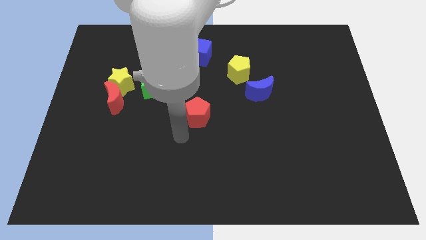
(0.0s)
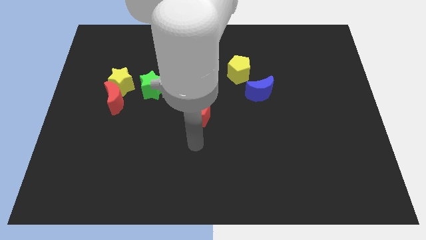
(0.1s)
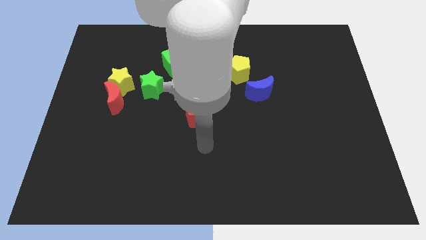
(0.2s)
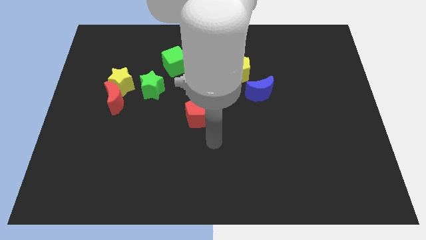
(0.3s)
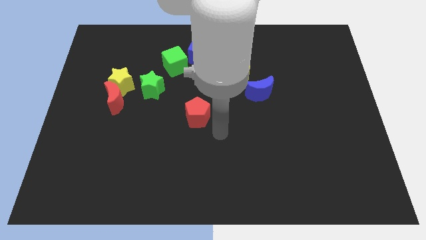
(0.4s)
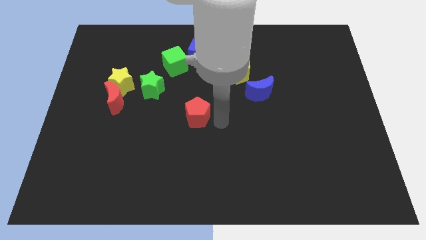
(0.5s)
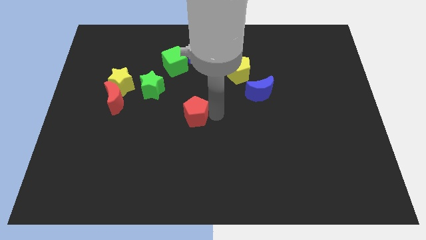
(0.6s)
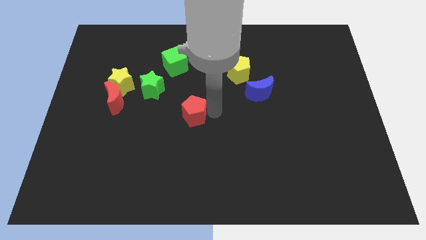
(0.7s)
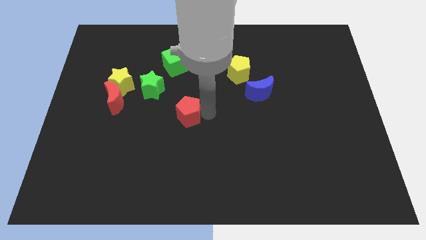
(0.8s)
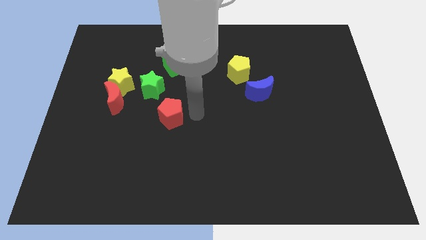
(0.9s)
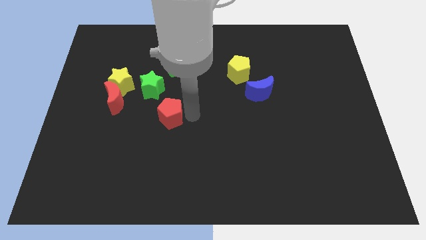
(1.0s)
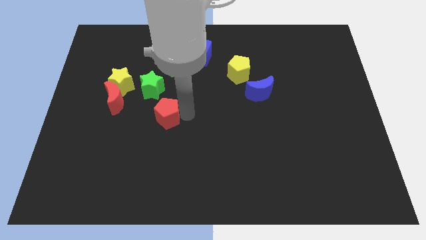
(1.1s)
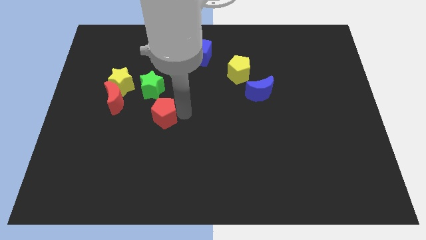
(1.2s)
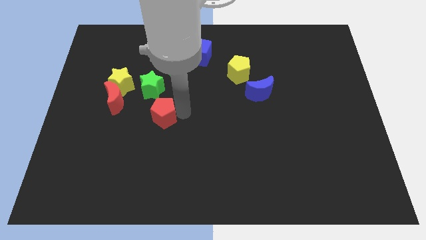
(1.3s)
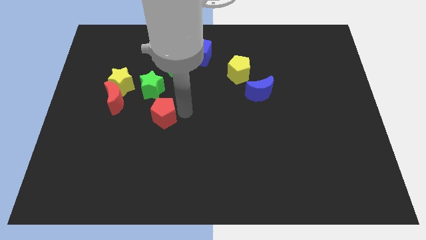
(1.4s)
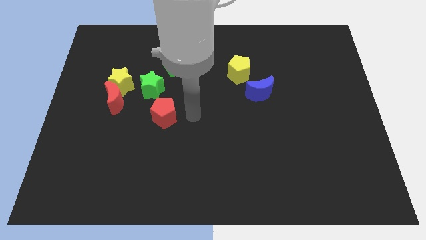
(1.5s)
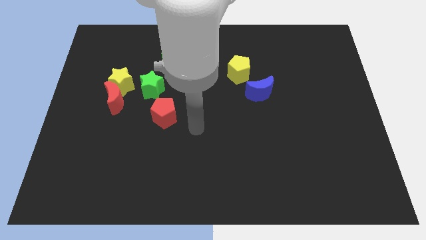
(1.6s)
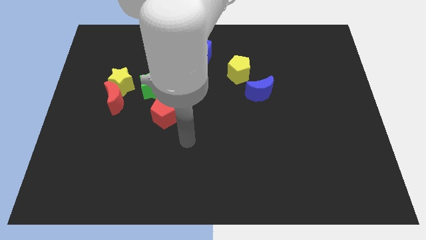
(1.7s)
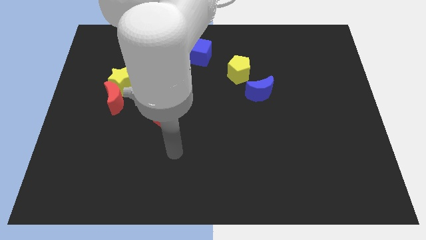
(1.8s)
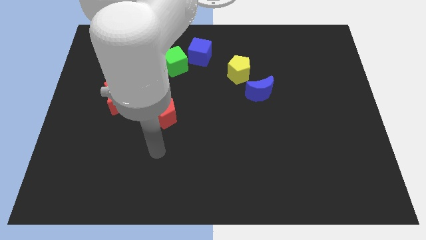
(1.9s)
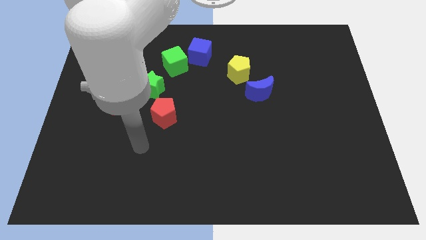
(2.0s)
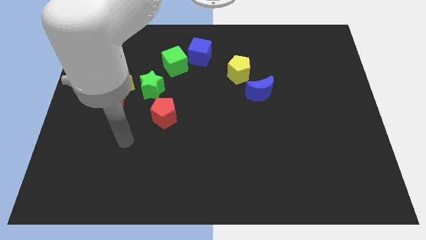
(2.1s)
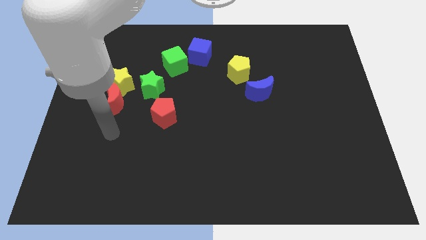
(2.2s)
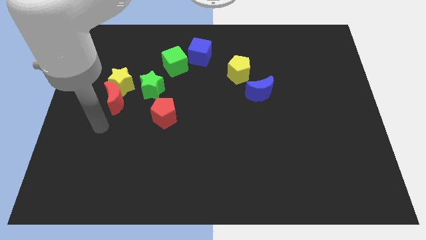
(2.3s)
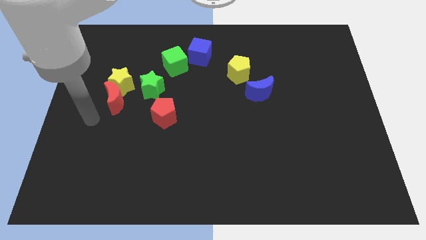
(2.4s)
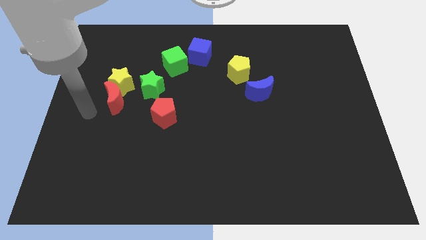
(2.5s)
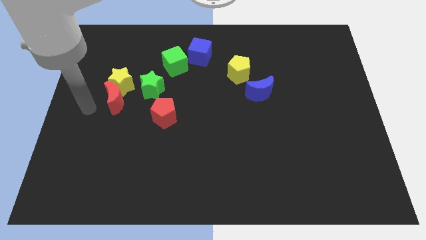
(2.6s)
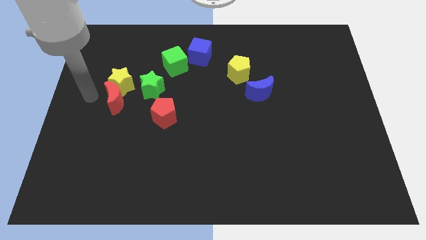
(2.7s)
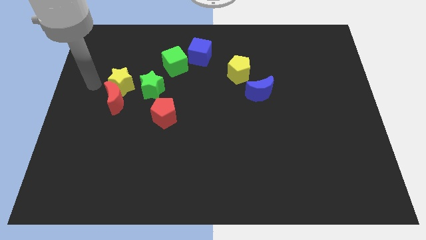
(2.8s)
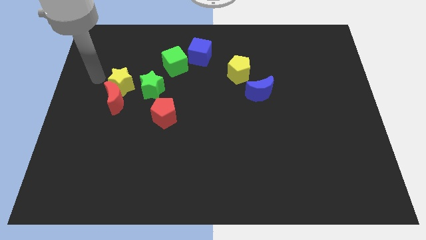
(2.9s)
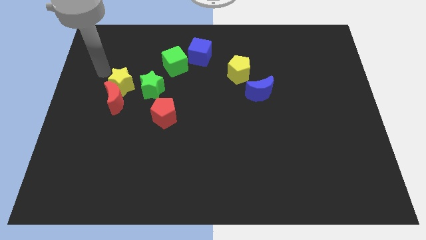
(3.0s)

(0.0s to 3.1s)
push the red pentagon slightly on the left side

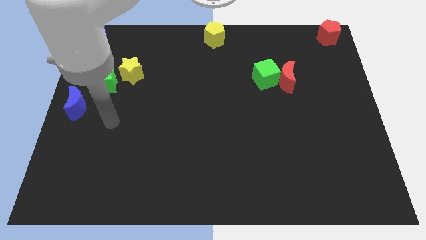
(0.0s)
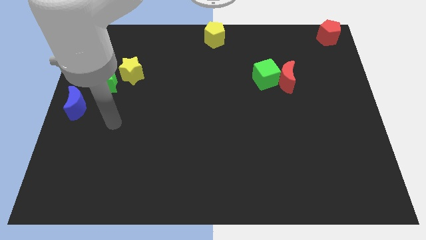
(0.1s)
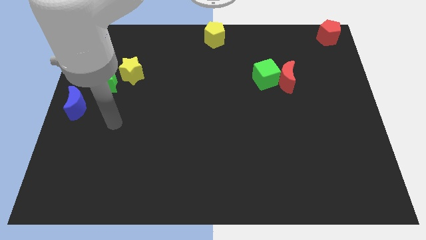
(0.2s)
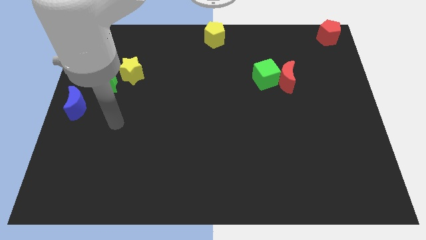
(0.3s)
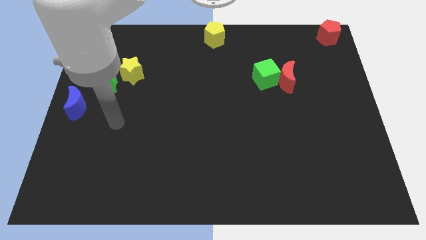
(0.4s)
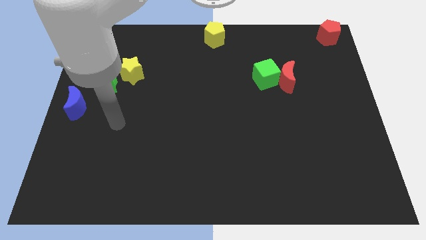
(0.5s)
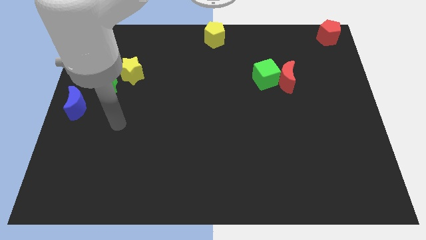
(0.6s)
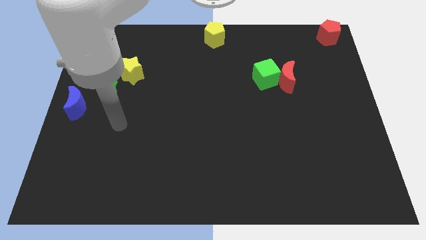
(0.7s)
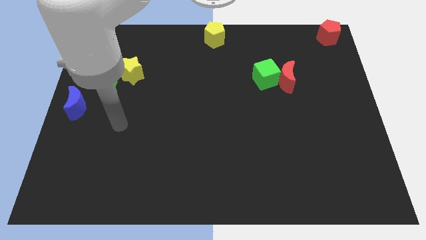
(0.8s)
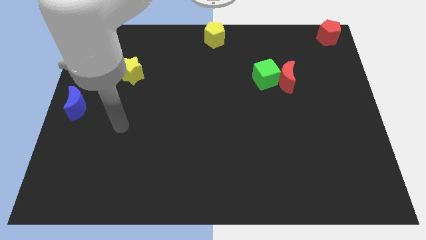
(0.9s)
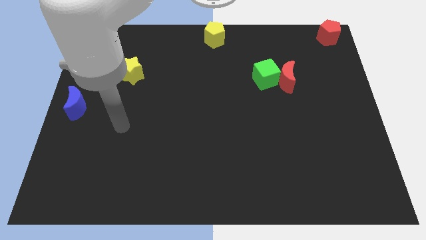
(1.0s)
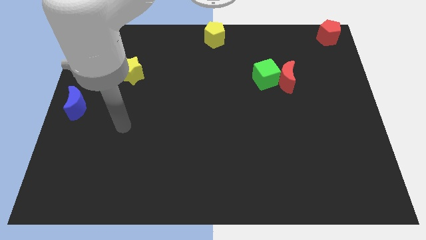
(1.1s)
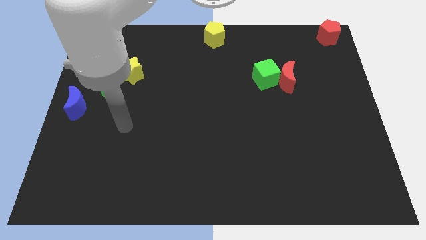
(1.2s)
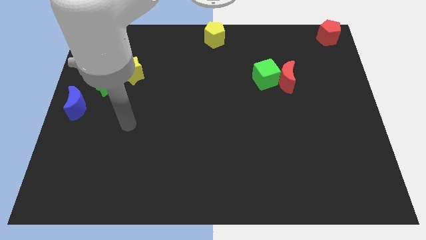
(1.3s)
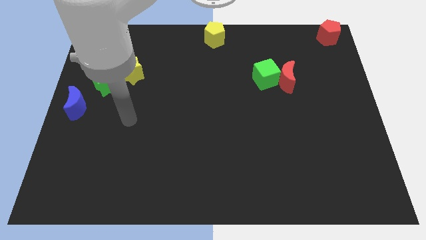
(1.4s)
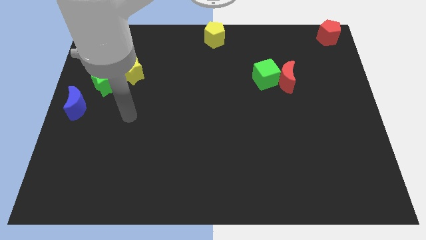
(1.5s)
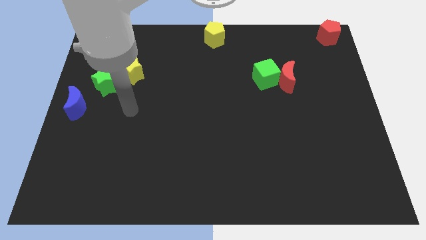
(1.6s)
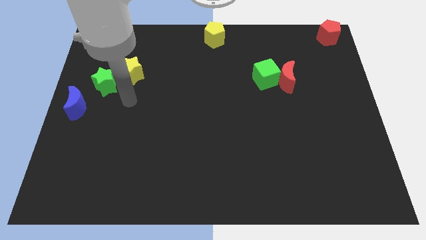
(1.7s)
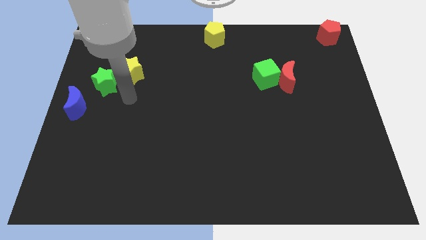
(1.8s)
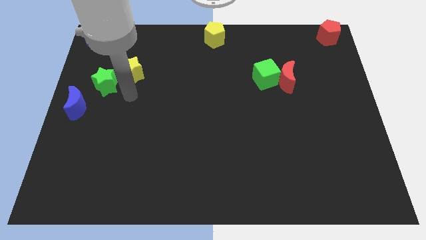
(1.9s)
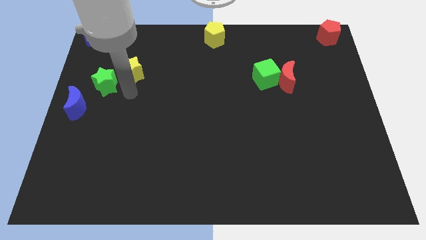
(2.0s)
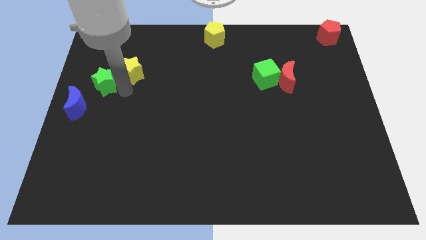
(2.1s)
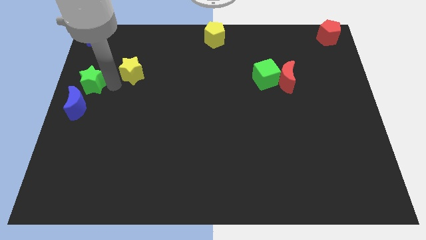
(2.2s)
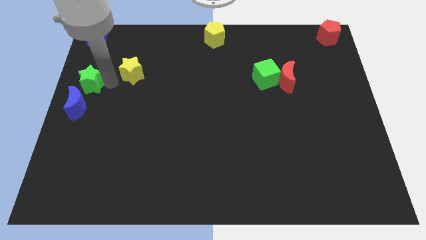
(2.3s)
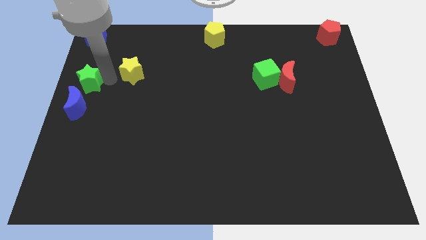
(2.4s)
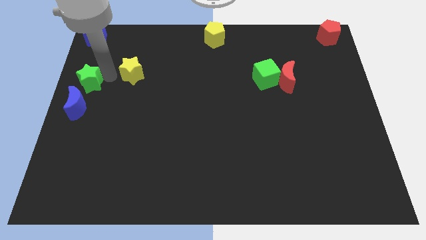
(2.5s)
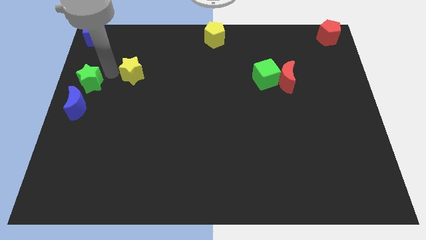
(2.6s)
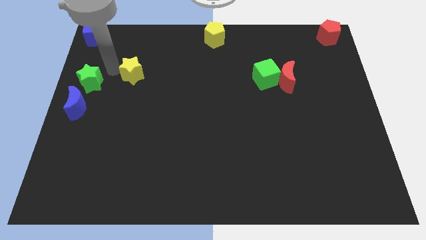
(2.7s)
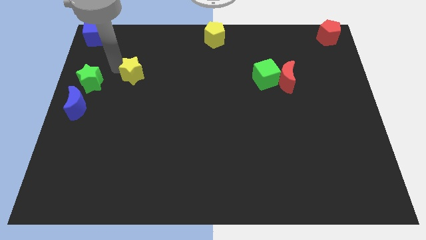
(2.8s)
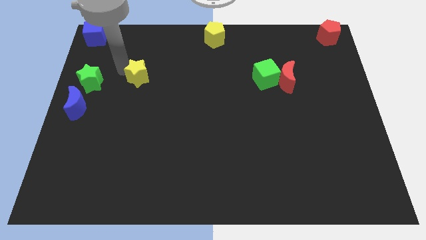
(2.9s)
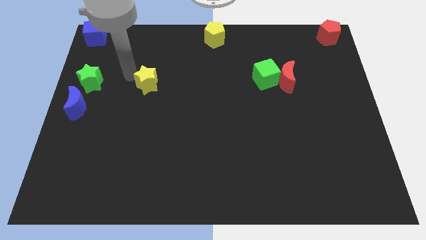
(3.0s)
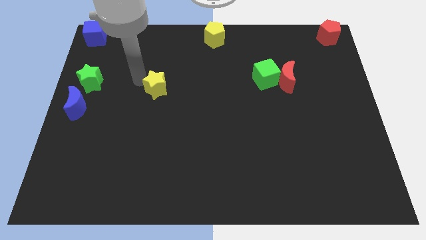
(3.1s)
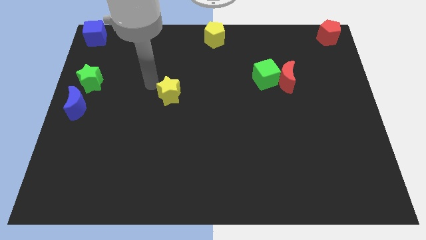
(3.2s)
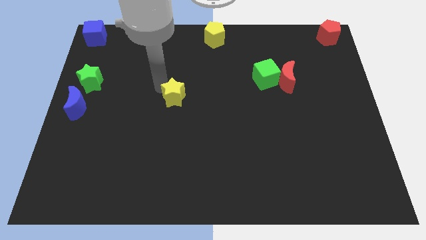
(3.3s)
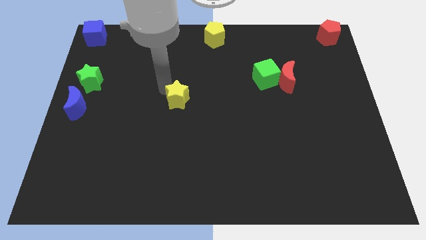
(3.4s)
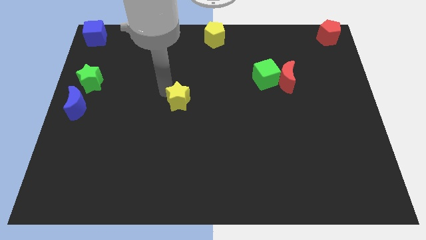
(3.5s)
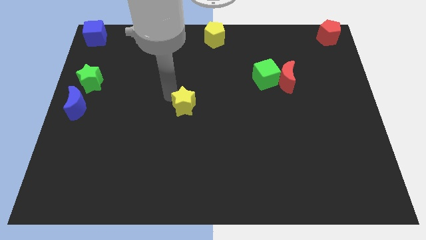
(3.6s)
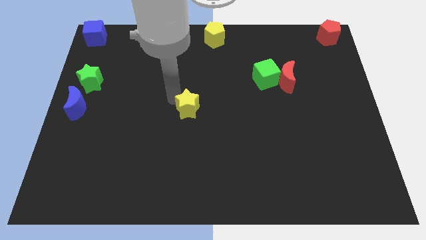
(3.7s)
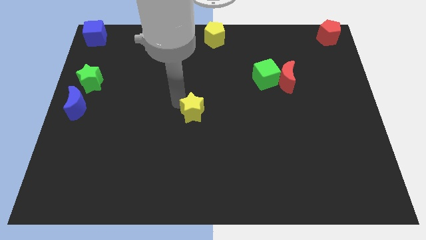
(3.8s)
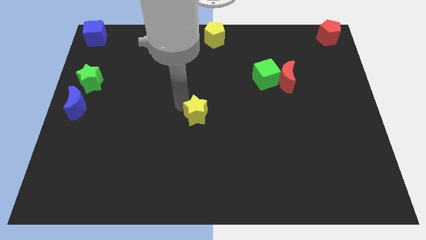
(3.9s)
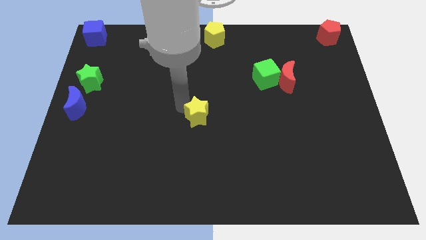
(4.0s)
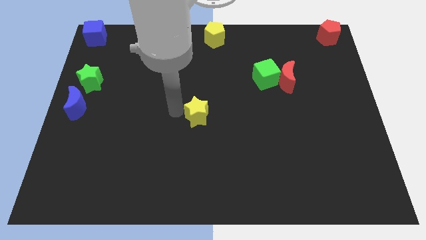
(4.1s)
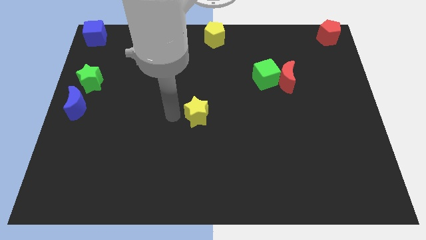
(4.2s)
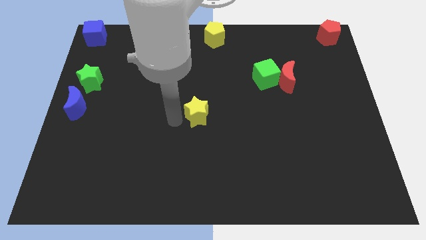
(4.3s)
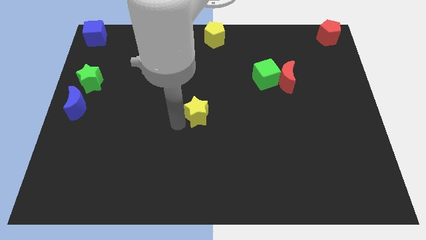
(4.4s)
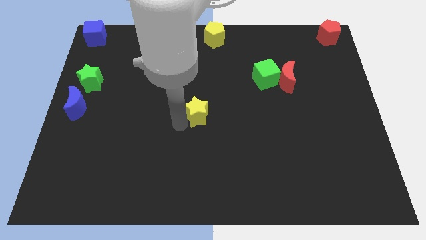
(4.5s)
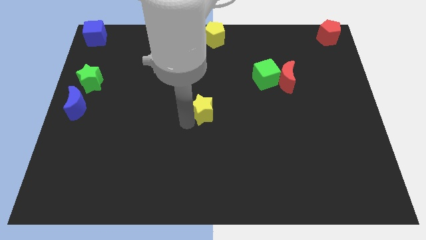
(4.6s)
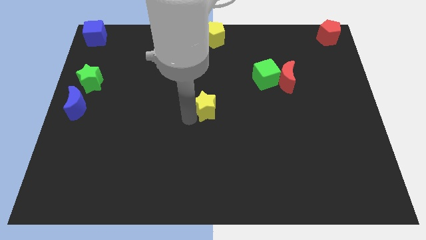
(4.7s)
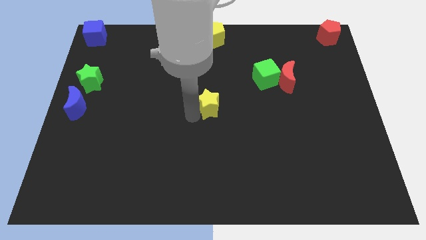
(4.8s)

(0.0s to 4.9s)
place the yellow star at the center of the table

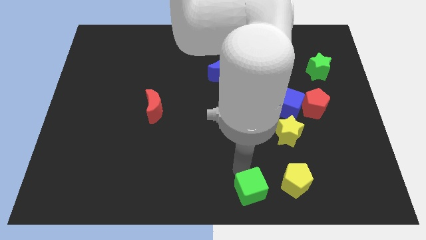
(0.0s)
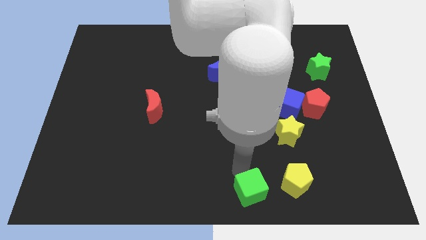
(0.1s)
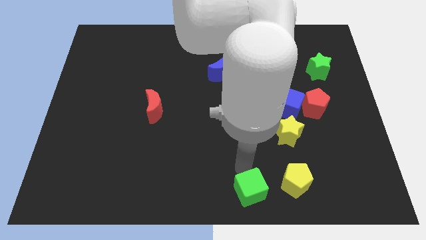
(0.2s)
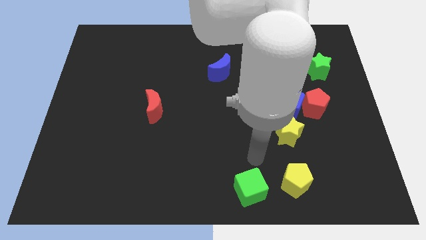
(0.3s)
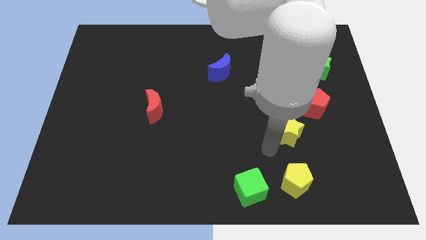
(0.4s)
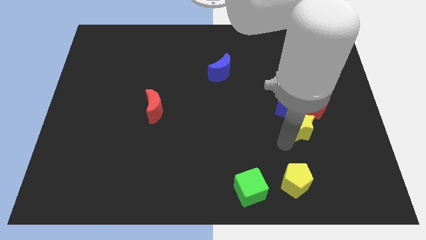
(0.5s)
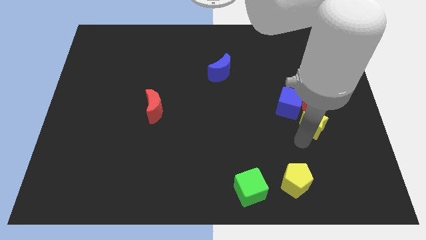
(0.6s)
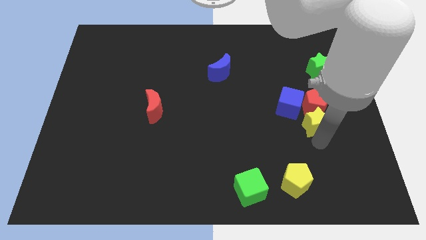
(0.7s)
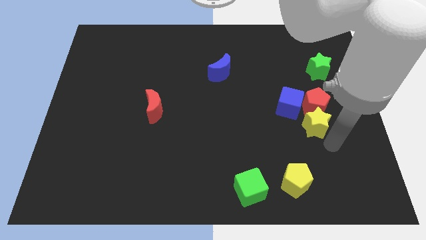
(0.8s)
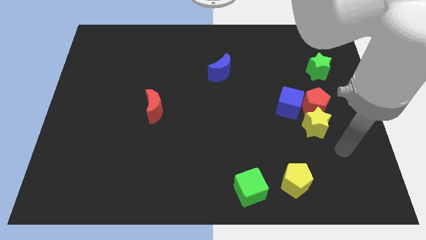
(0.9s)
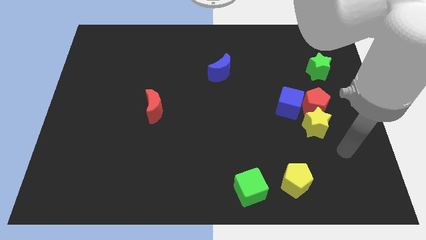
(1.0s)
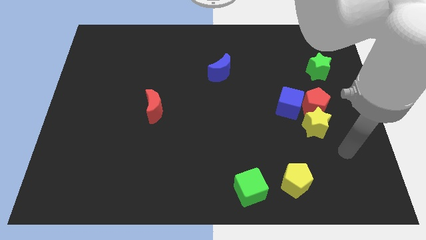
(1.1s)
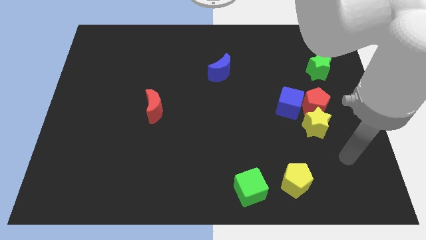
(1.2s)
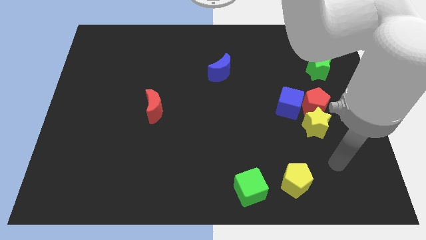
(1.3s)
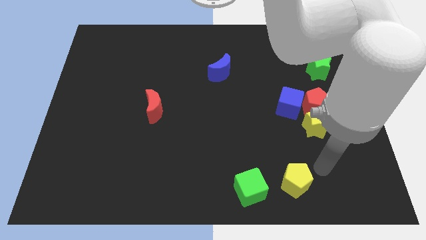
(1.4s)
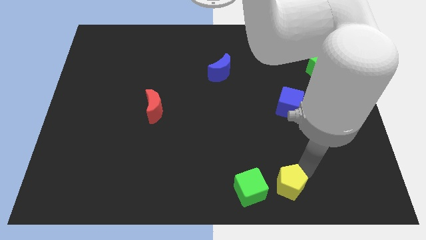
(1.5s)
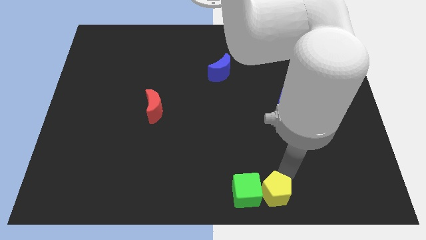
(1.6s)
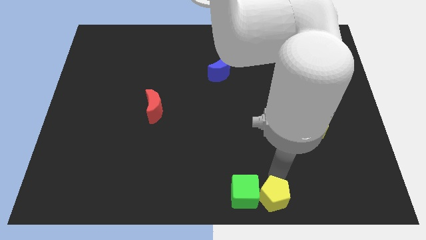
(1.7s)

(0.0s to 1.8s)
move yellow pentagon right to the green cube
